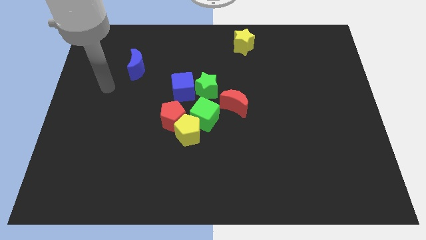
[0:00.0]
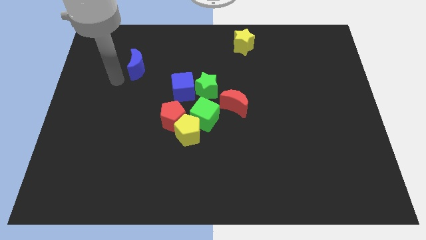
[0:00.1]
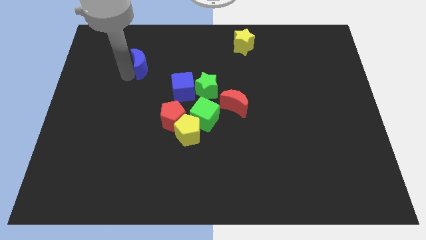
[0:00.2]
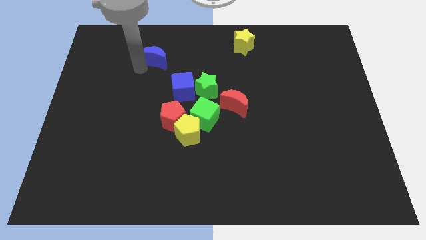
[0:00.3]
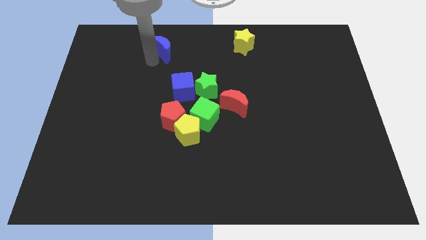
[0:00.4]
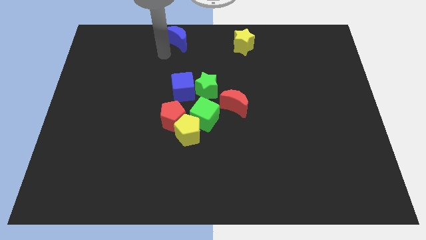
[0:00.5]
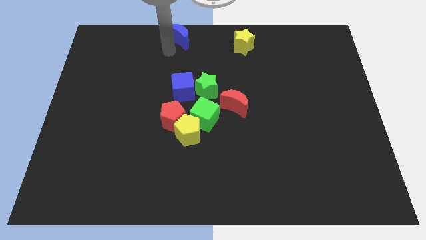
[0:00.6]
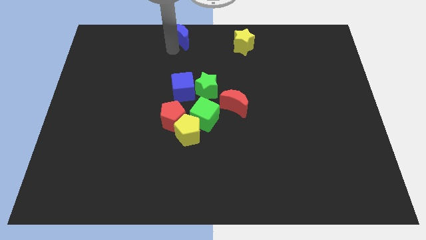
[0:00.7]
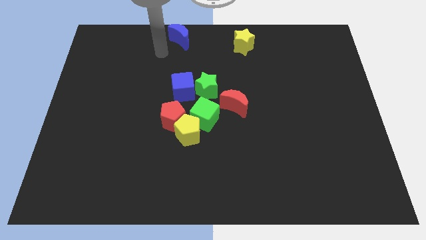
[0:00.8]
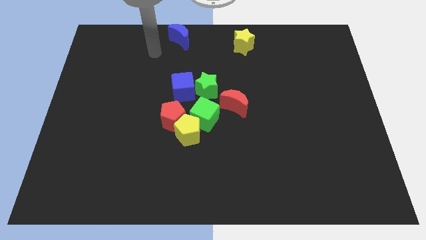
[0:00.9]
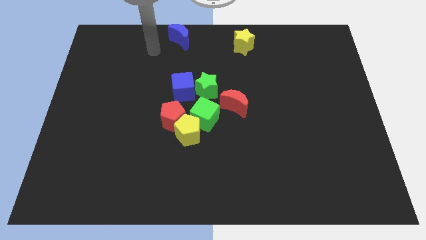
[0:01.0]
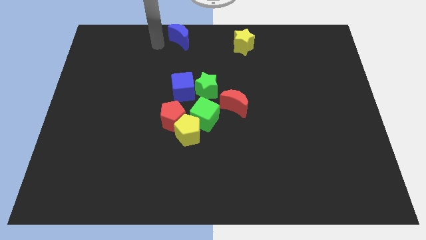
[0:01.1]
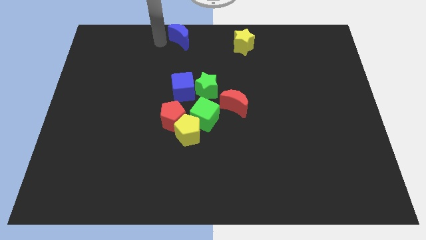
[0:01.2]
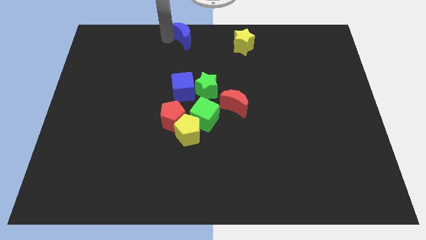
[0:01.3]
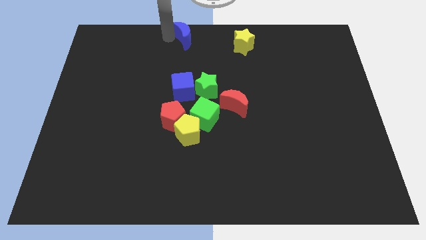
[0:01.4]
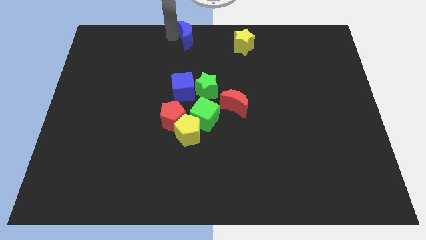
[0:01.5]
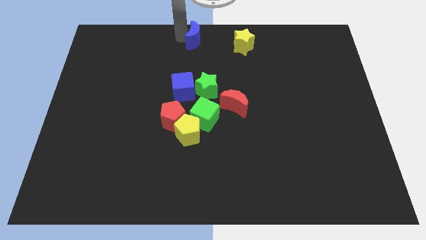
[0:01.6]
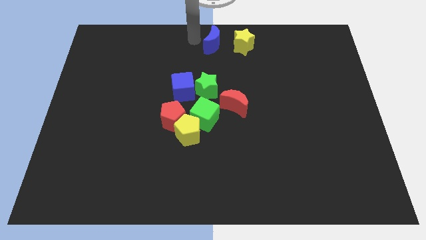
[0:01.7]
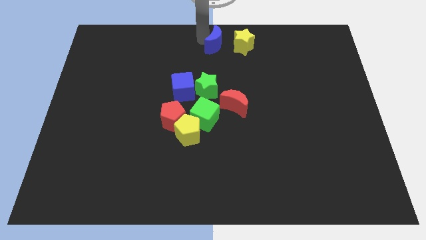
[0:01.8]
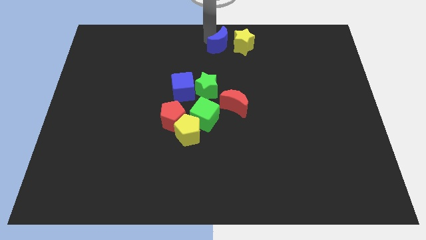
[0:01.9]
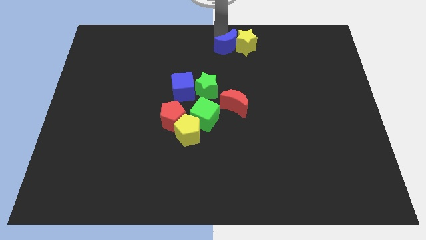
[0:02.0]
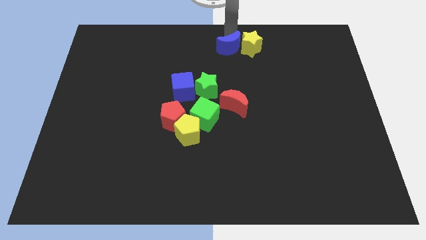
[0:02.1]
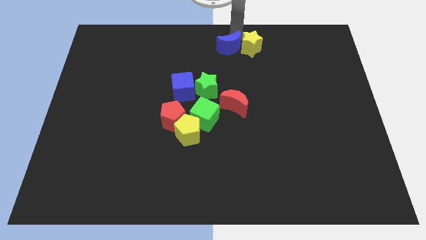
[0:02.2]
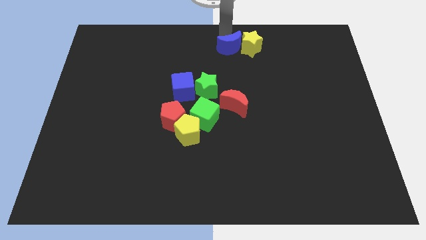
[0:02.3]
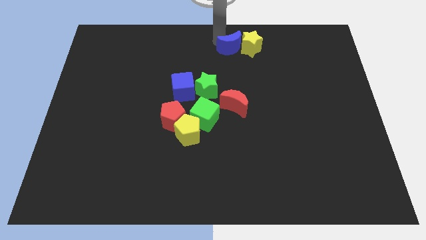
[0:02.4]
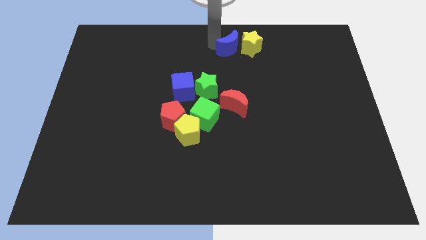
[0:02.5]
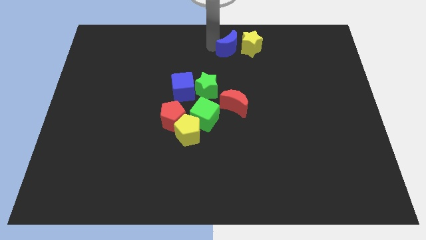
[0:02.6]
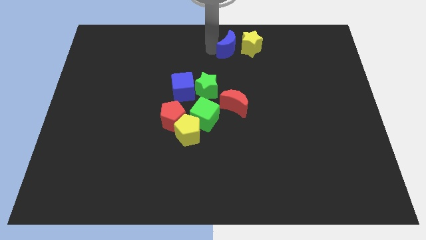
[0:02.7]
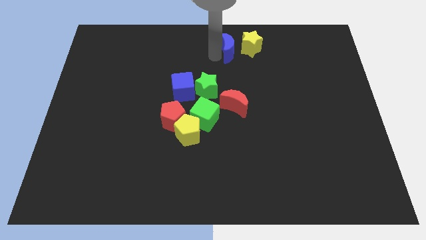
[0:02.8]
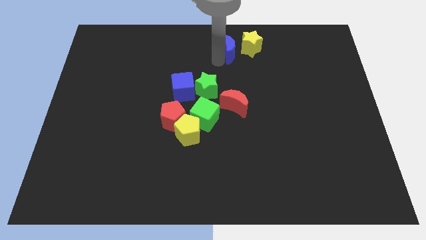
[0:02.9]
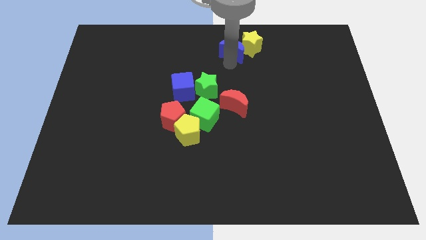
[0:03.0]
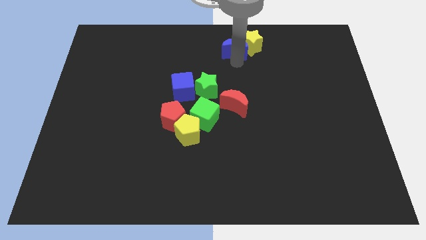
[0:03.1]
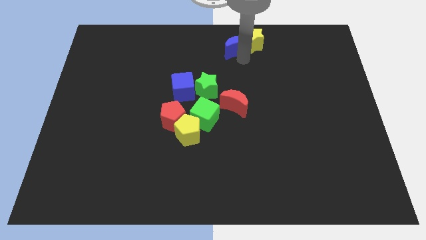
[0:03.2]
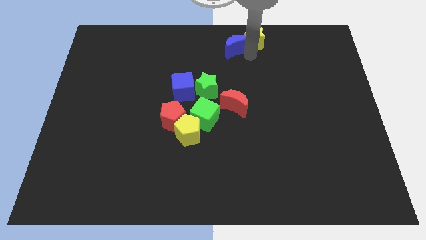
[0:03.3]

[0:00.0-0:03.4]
push the blue crescent to the left of the yellow star

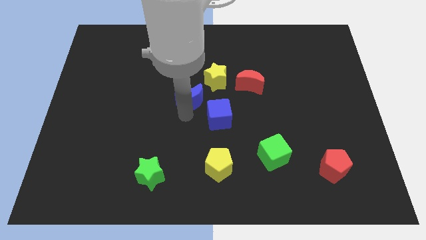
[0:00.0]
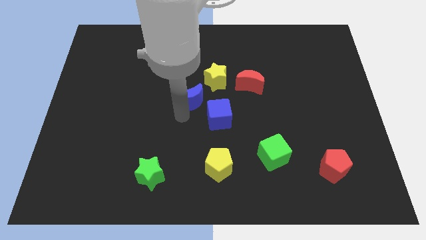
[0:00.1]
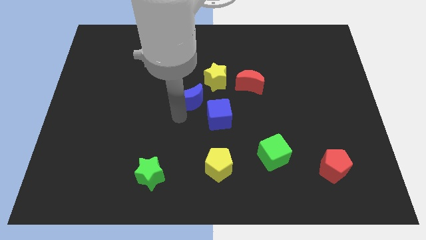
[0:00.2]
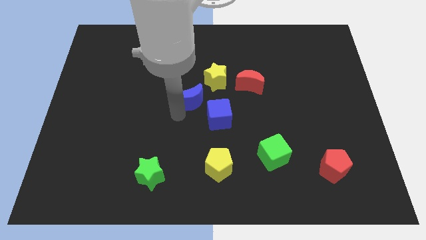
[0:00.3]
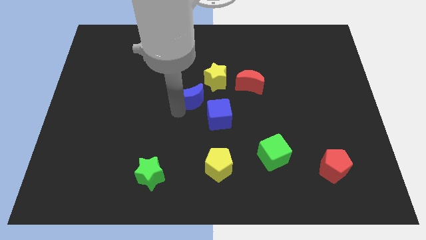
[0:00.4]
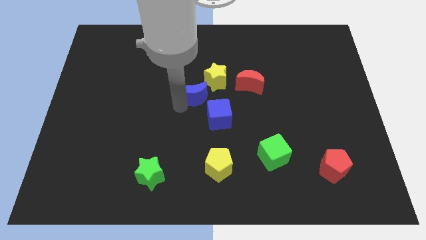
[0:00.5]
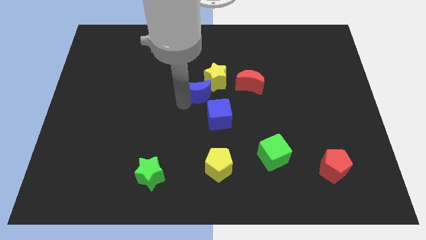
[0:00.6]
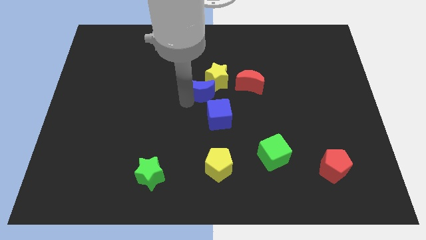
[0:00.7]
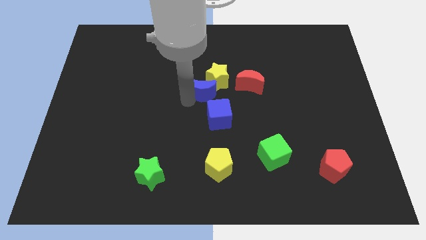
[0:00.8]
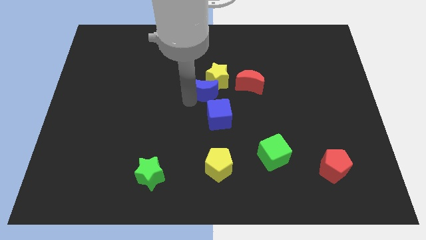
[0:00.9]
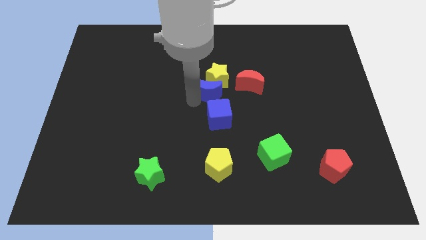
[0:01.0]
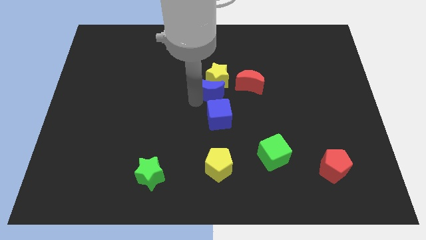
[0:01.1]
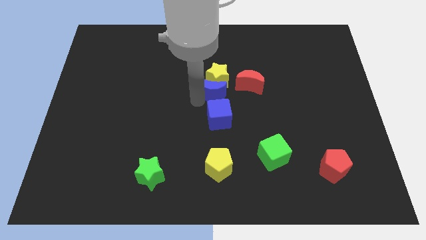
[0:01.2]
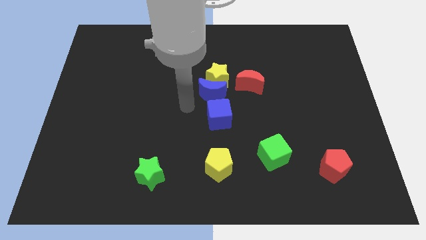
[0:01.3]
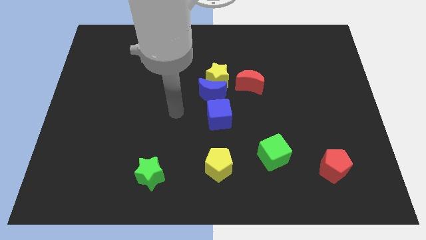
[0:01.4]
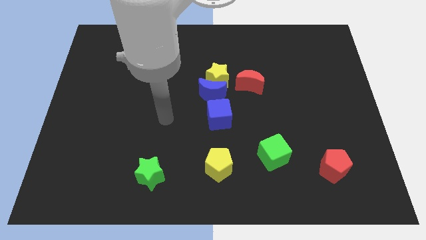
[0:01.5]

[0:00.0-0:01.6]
place the blue moon below the yellow star

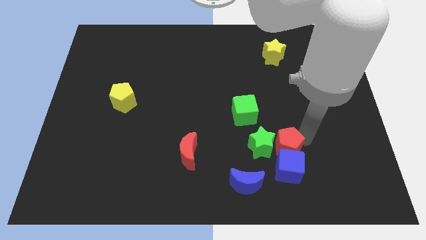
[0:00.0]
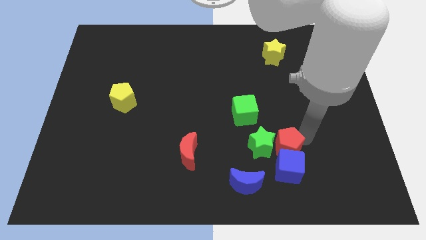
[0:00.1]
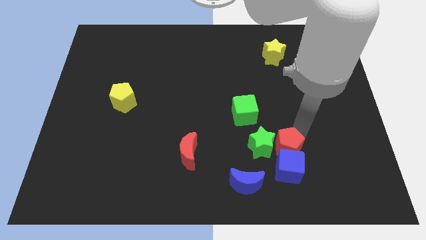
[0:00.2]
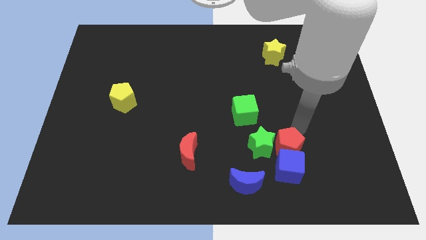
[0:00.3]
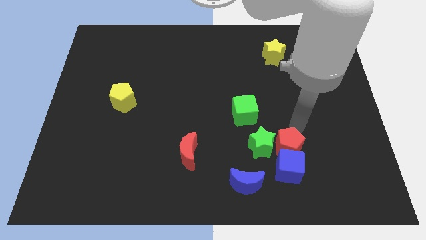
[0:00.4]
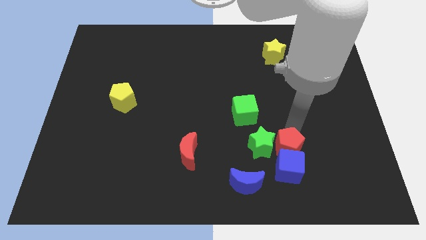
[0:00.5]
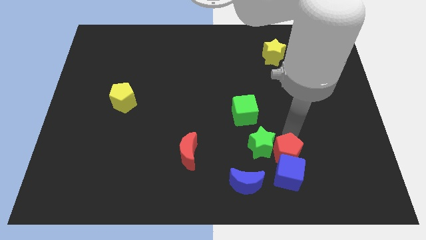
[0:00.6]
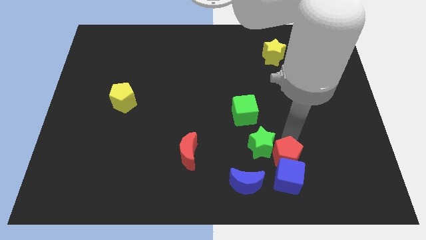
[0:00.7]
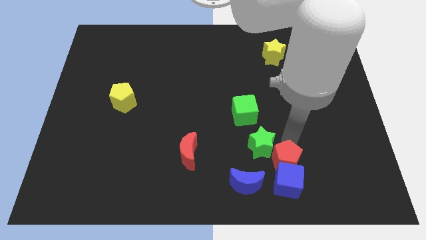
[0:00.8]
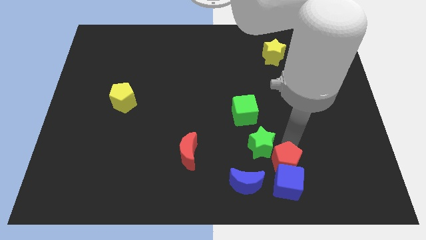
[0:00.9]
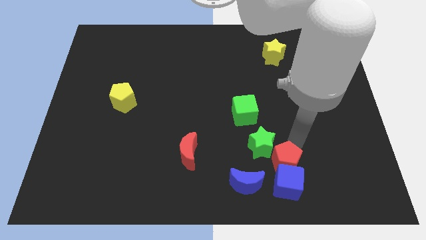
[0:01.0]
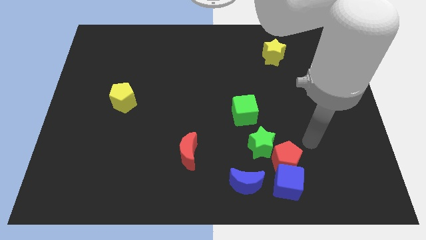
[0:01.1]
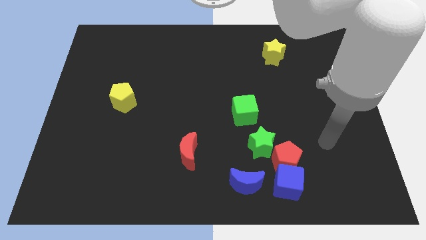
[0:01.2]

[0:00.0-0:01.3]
push the red pentagon along with the blue cube slightly down

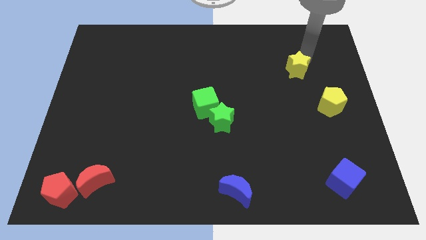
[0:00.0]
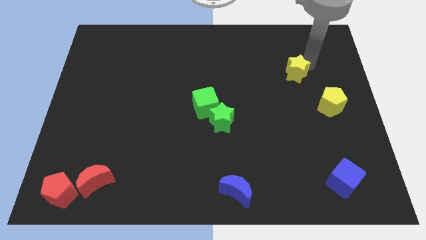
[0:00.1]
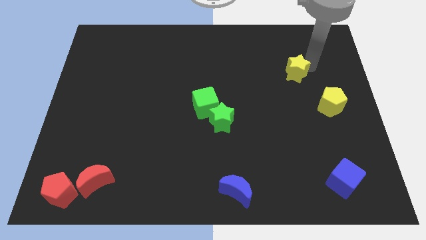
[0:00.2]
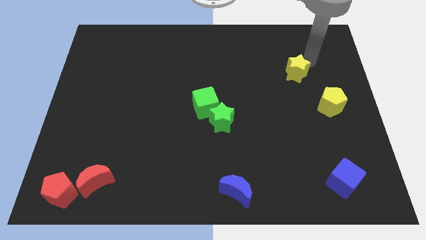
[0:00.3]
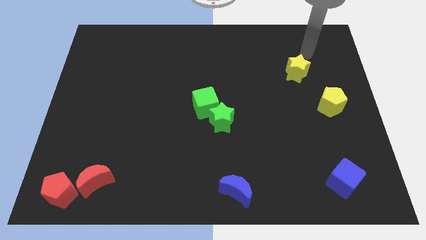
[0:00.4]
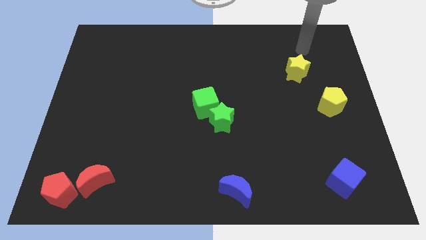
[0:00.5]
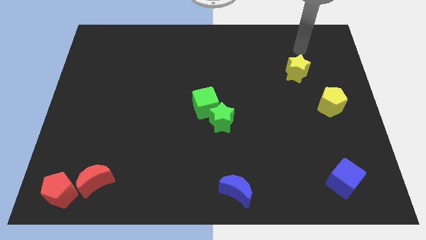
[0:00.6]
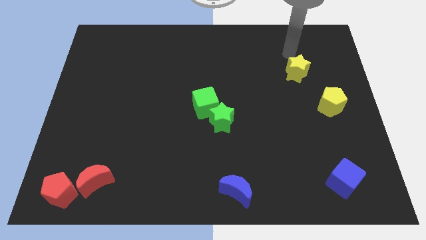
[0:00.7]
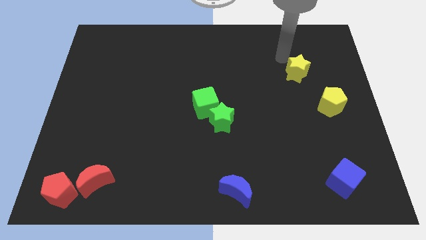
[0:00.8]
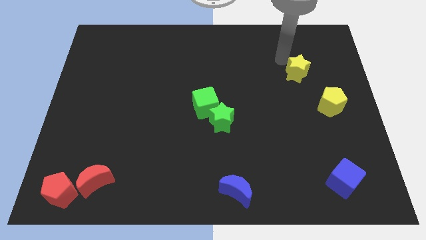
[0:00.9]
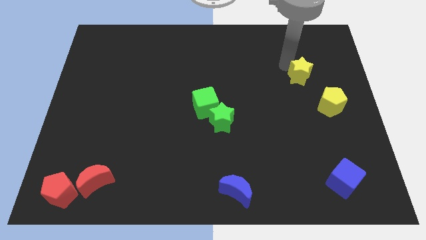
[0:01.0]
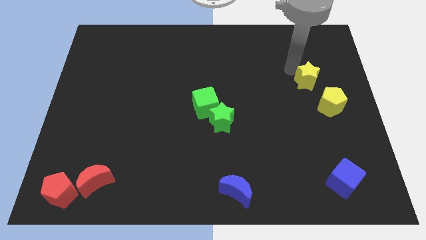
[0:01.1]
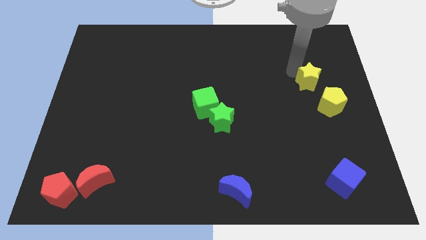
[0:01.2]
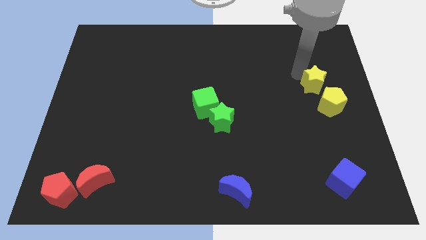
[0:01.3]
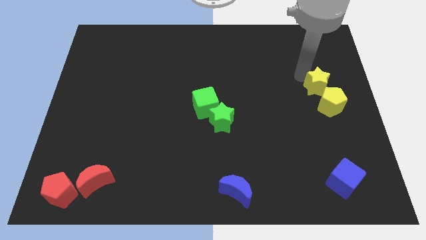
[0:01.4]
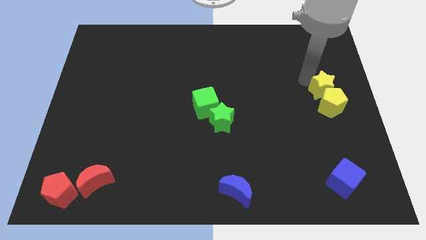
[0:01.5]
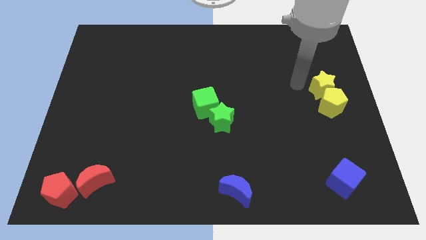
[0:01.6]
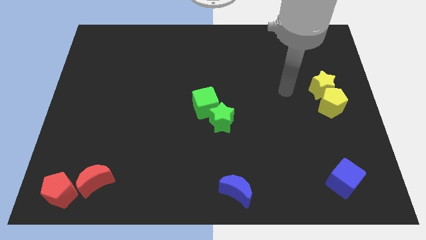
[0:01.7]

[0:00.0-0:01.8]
push the yellow star into the top side of the yellow pentagon

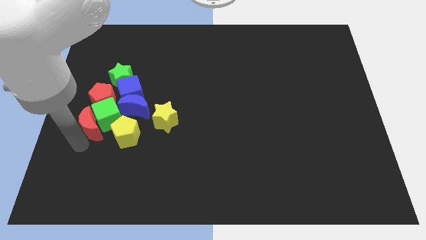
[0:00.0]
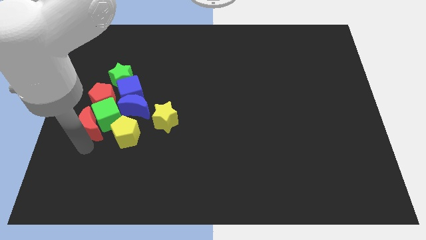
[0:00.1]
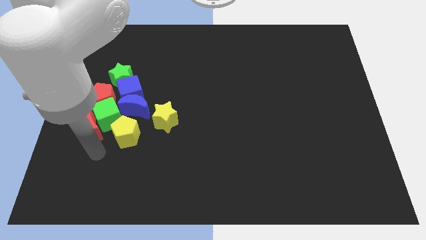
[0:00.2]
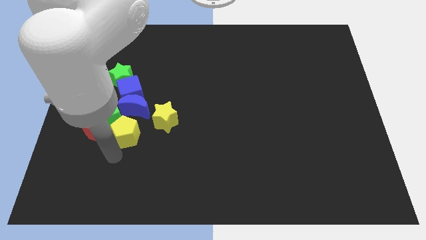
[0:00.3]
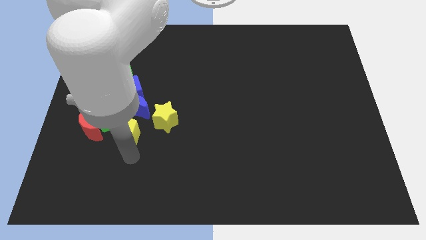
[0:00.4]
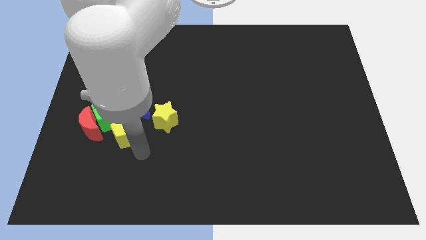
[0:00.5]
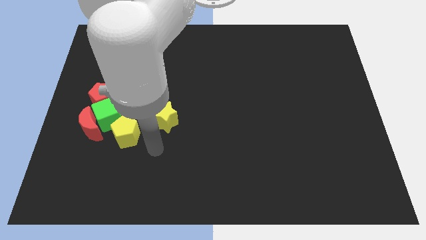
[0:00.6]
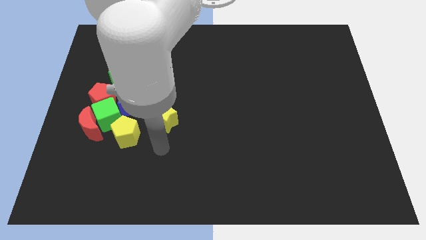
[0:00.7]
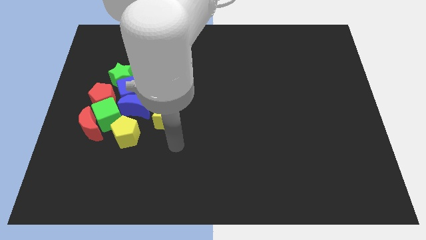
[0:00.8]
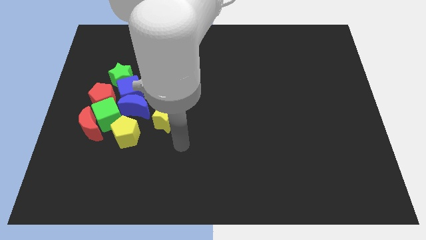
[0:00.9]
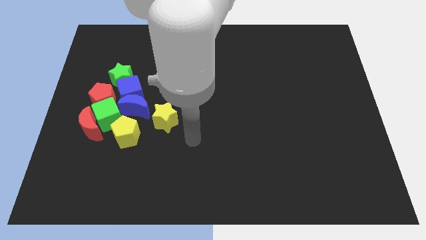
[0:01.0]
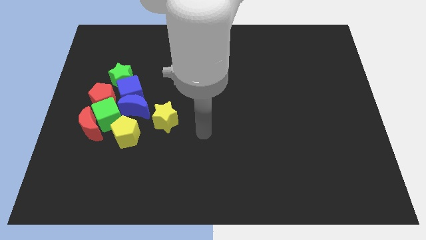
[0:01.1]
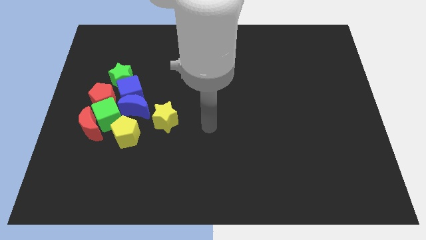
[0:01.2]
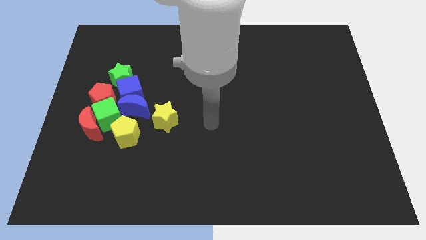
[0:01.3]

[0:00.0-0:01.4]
move your arm away from red crescent
